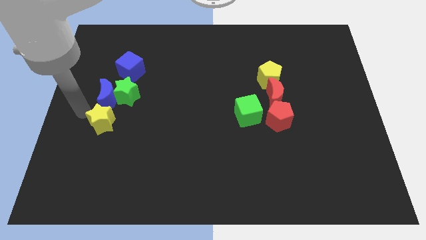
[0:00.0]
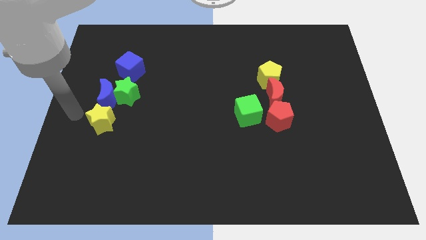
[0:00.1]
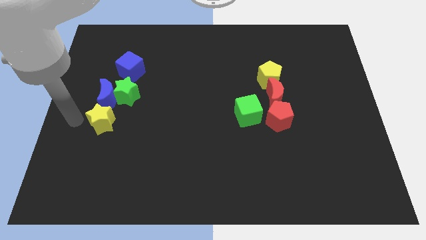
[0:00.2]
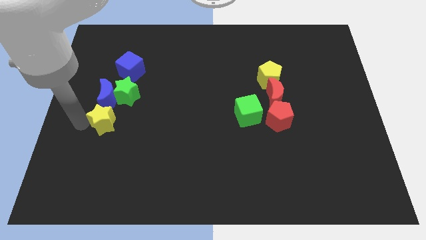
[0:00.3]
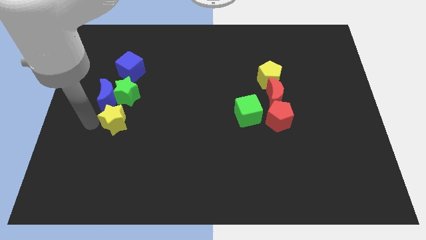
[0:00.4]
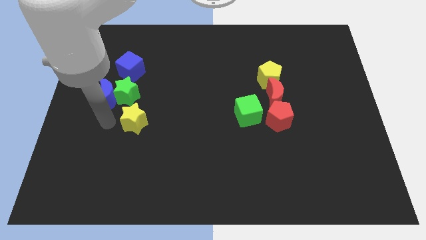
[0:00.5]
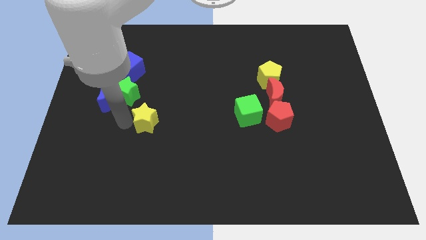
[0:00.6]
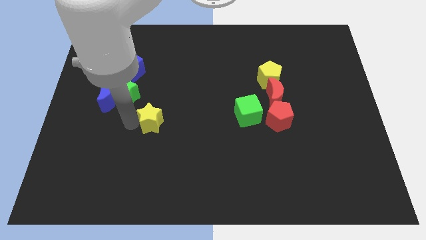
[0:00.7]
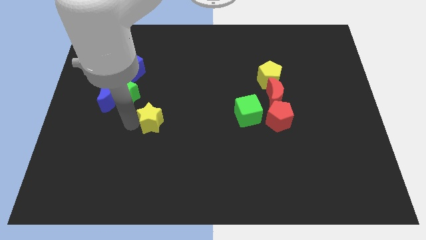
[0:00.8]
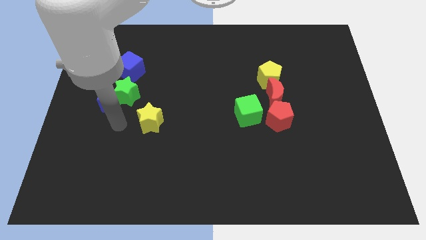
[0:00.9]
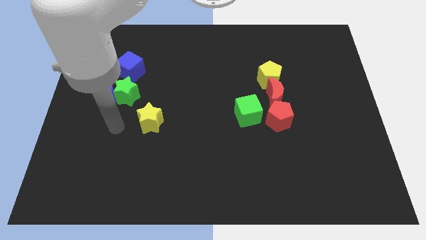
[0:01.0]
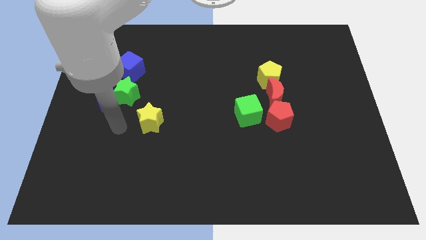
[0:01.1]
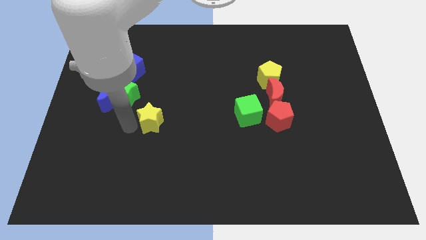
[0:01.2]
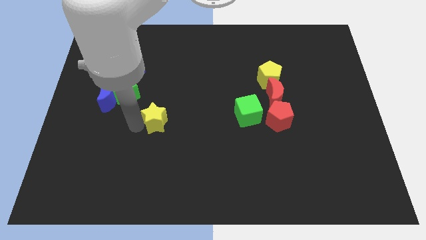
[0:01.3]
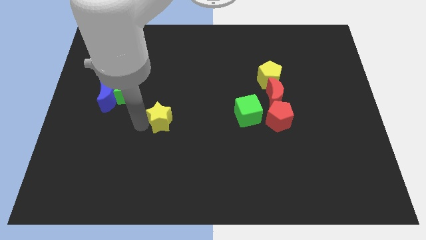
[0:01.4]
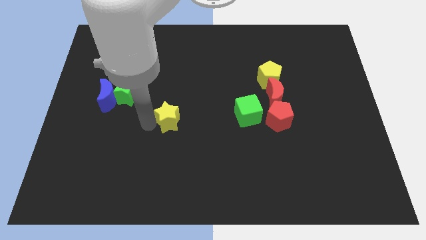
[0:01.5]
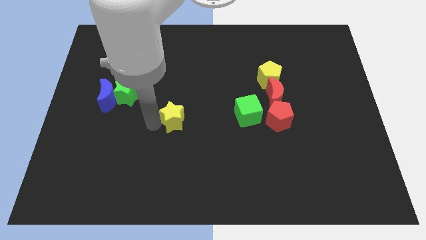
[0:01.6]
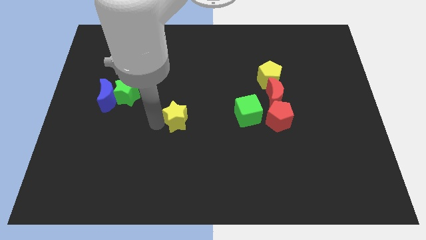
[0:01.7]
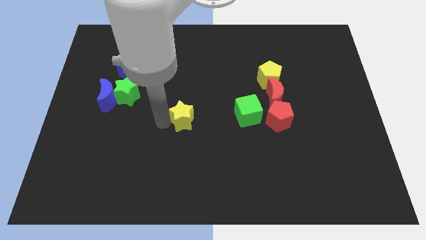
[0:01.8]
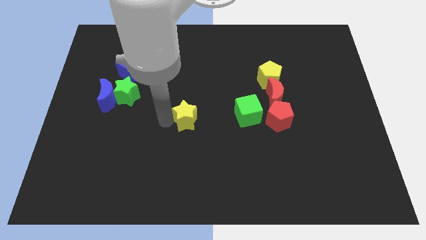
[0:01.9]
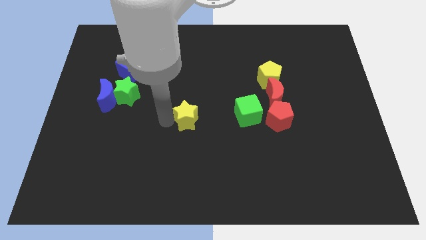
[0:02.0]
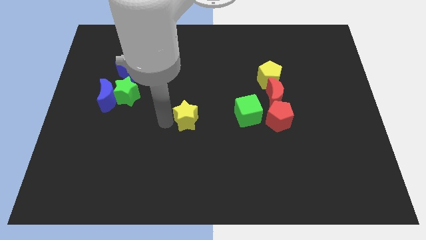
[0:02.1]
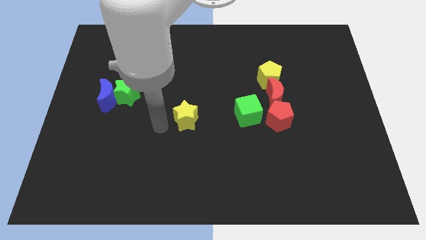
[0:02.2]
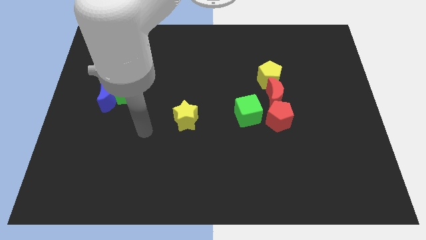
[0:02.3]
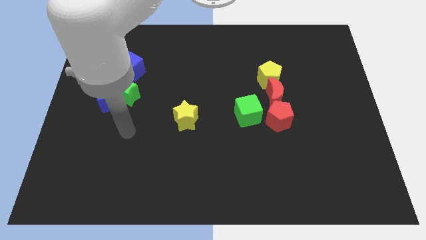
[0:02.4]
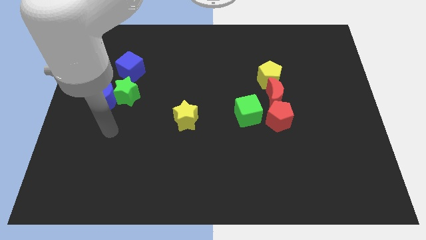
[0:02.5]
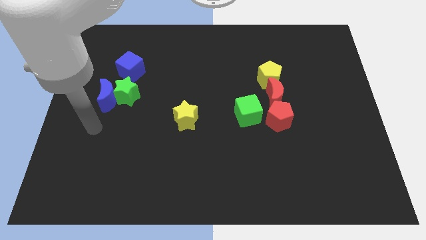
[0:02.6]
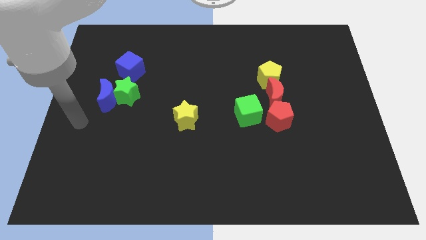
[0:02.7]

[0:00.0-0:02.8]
push the yellow star to the center of the board

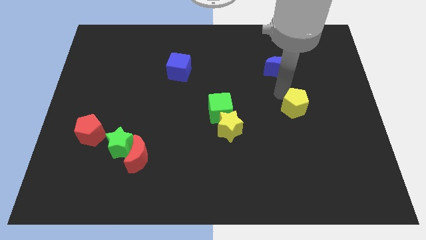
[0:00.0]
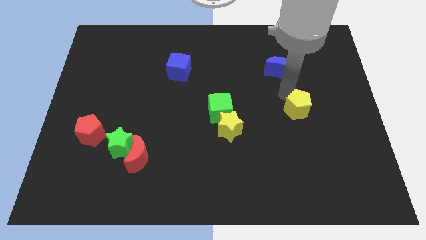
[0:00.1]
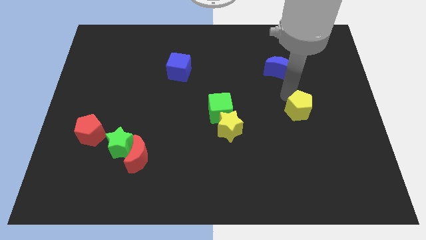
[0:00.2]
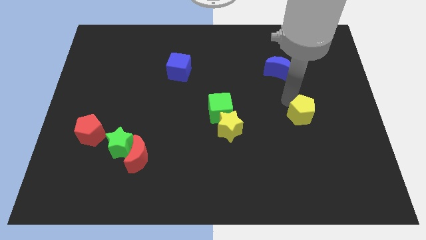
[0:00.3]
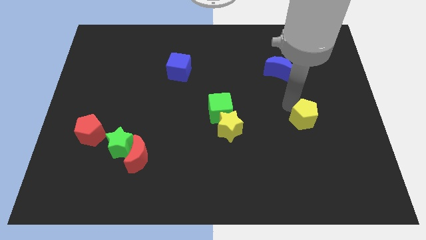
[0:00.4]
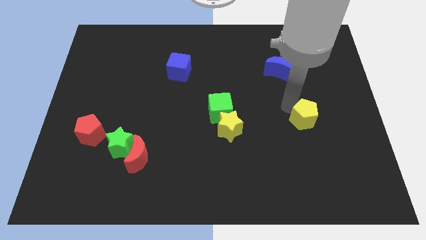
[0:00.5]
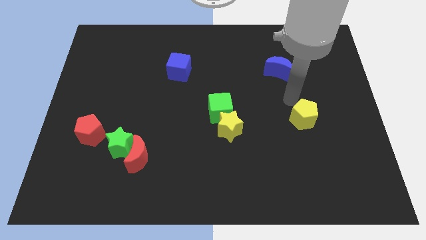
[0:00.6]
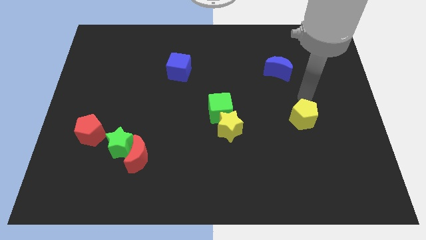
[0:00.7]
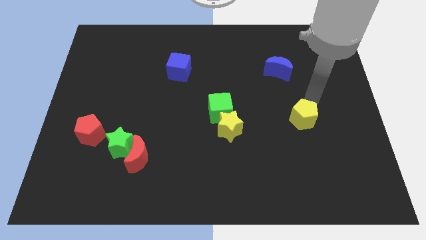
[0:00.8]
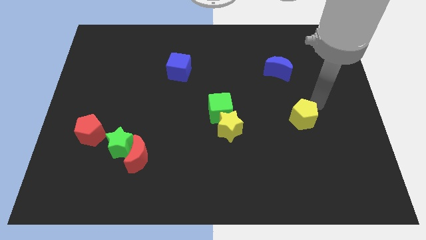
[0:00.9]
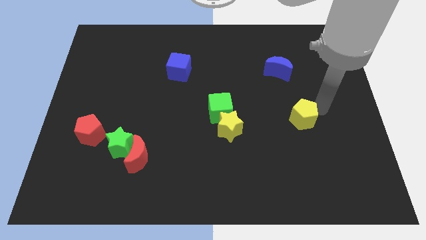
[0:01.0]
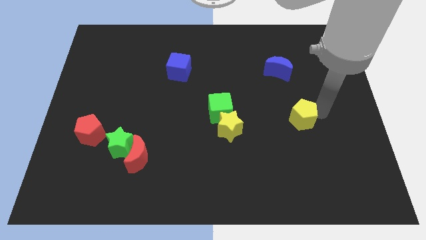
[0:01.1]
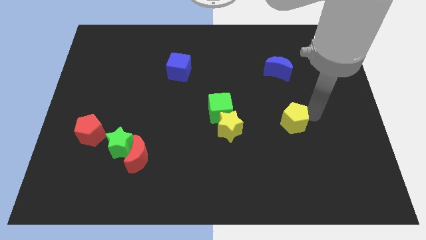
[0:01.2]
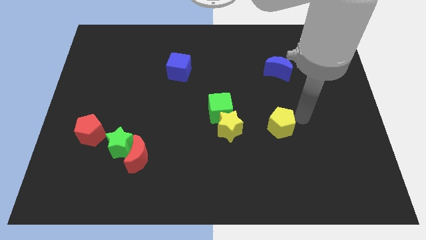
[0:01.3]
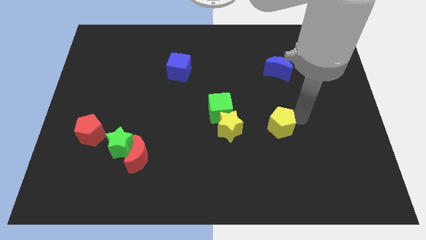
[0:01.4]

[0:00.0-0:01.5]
place the yellow pentagon to the right side of the yellow star

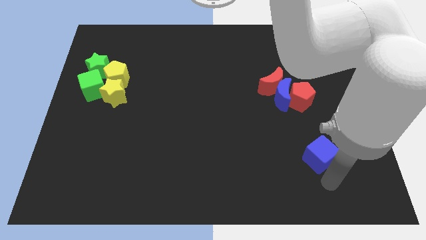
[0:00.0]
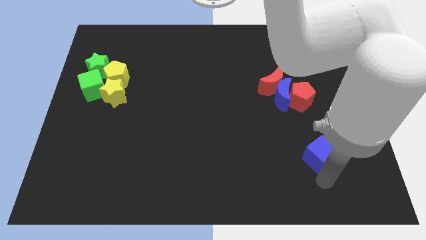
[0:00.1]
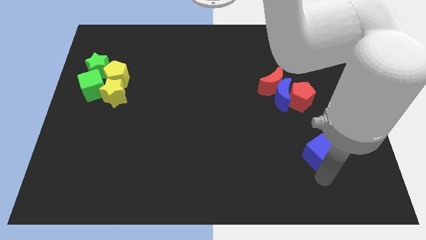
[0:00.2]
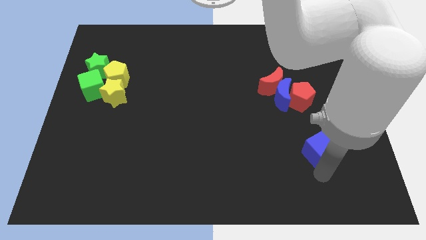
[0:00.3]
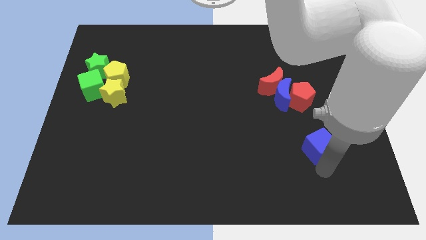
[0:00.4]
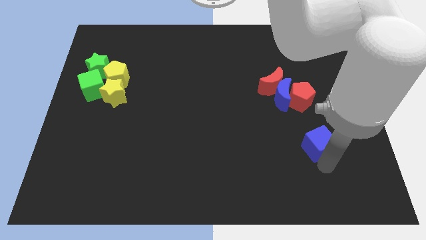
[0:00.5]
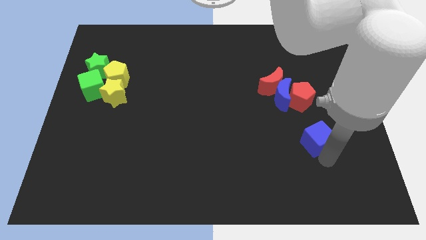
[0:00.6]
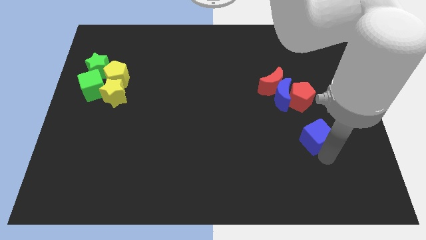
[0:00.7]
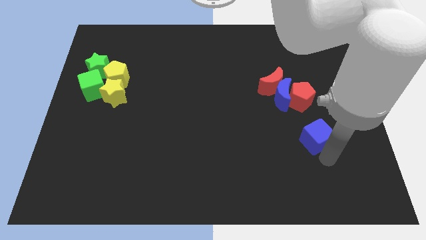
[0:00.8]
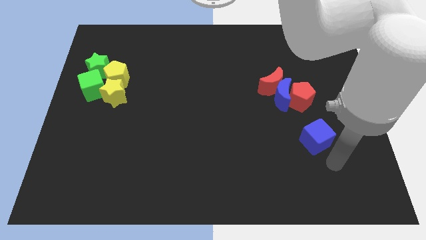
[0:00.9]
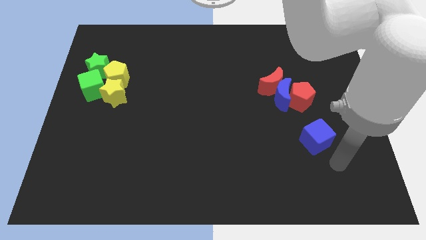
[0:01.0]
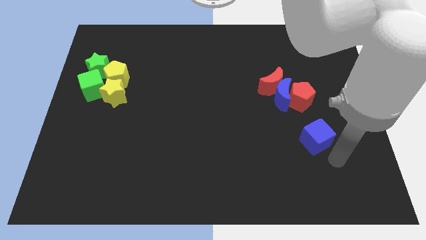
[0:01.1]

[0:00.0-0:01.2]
push the blue cube slightly to the top

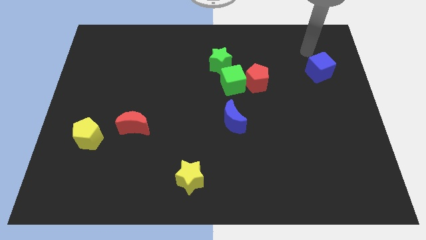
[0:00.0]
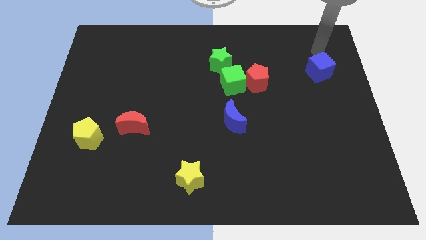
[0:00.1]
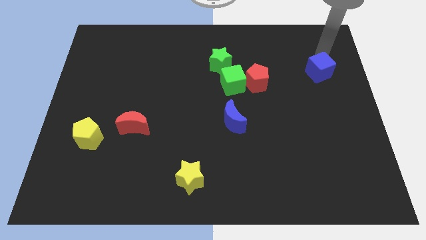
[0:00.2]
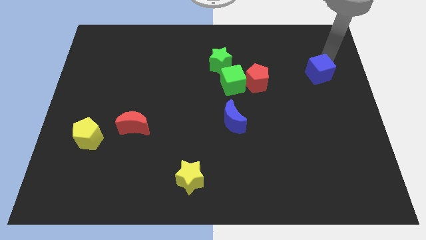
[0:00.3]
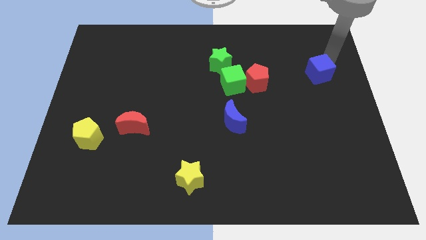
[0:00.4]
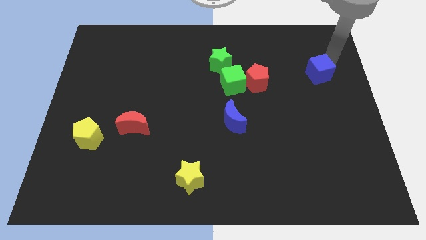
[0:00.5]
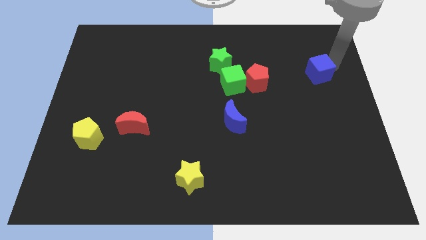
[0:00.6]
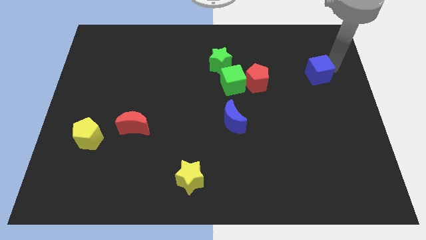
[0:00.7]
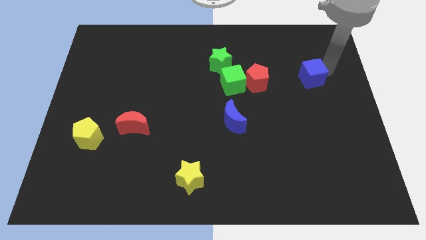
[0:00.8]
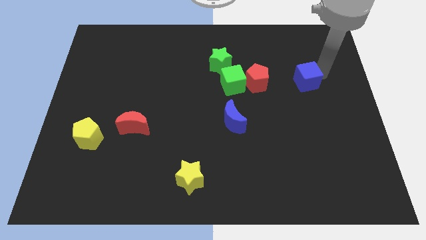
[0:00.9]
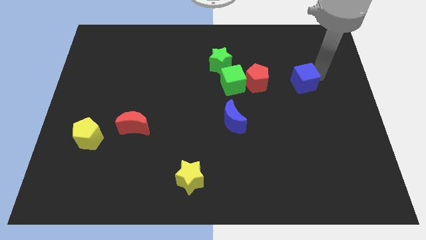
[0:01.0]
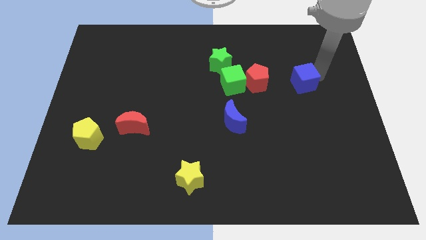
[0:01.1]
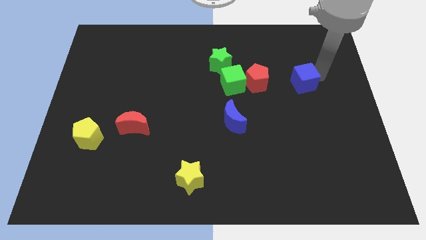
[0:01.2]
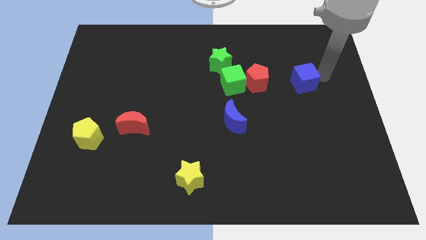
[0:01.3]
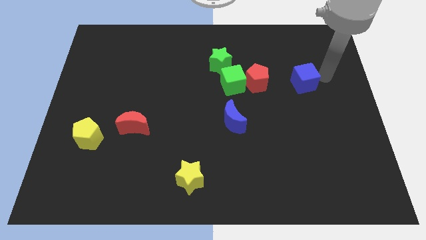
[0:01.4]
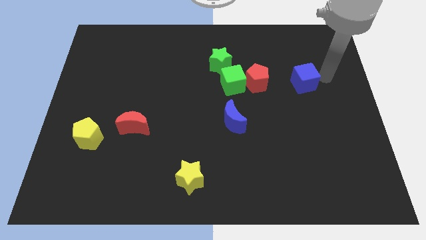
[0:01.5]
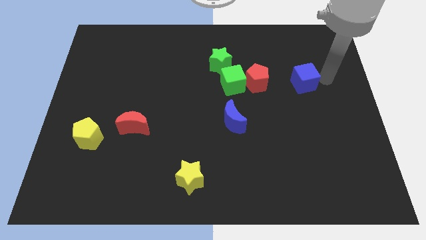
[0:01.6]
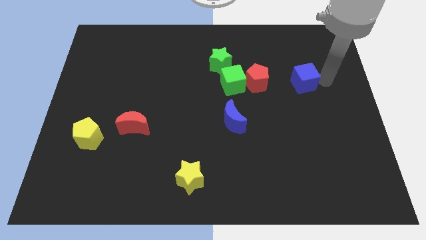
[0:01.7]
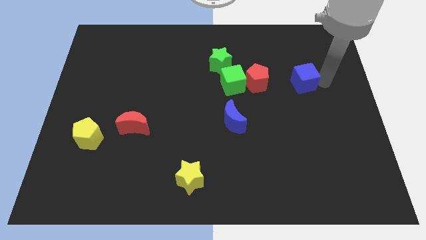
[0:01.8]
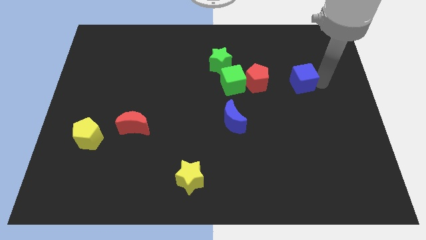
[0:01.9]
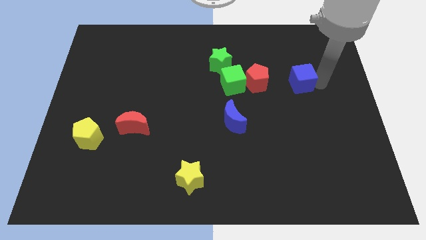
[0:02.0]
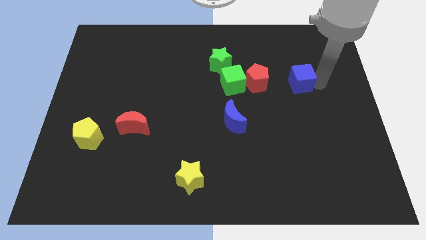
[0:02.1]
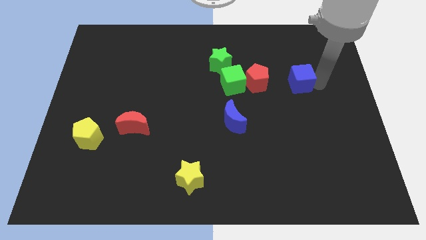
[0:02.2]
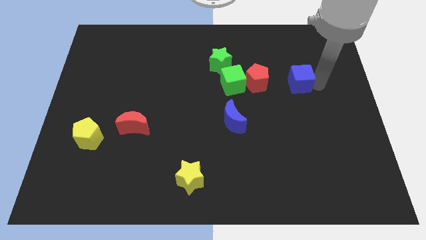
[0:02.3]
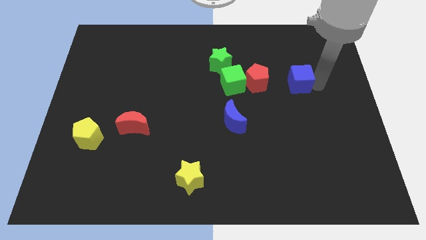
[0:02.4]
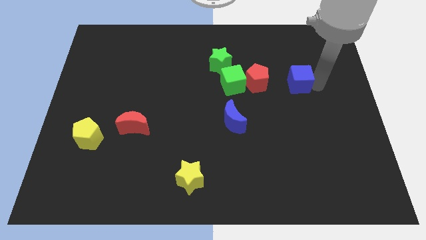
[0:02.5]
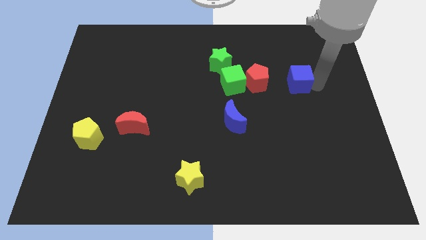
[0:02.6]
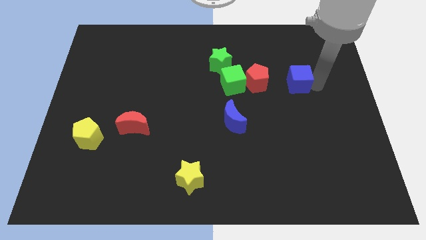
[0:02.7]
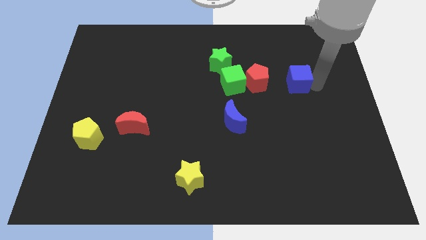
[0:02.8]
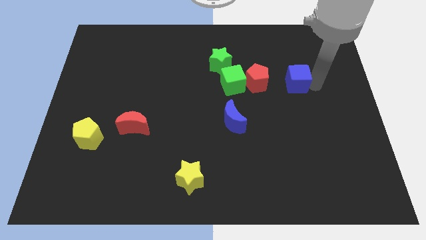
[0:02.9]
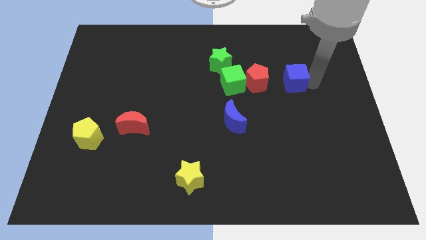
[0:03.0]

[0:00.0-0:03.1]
push blue cube towards red pentagon

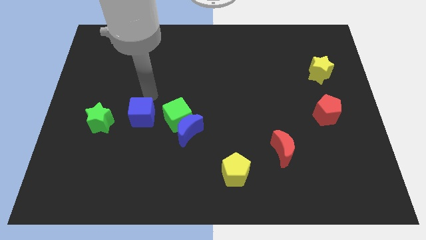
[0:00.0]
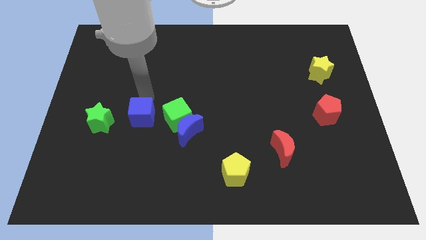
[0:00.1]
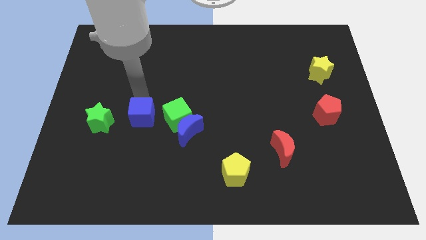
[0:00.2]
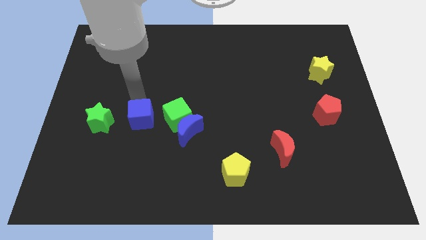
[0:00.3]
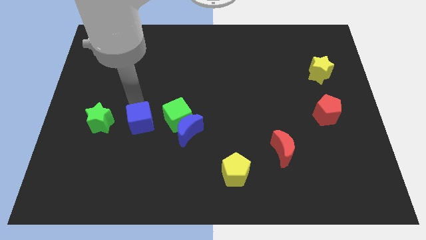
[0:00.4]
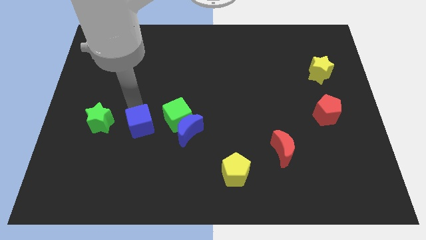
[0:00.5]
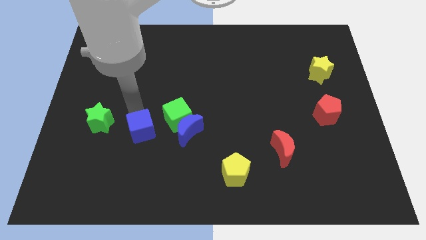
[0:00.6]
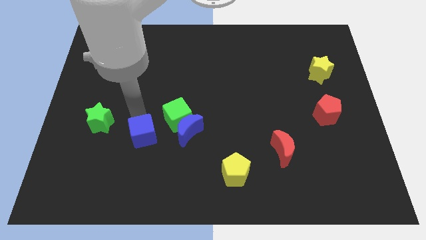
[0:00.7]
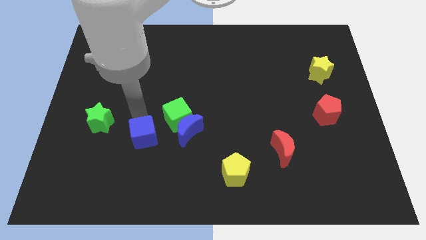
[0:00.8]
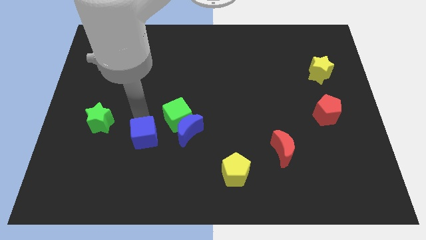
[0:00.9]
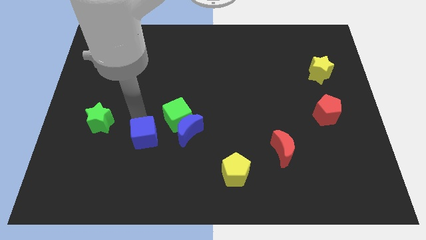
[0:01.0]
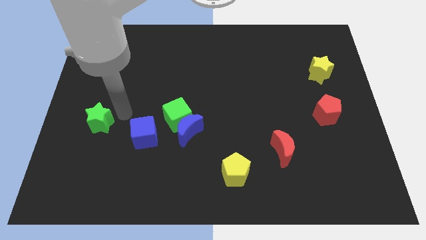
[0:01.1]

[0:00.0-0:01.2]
push the blue cube to the left of blue crescent
